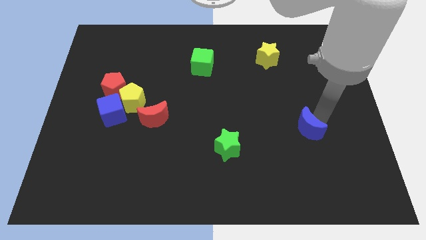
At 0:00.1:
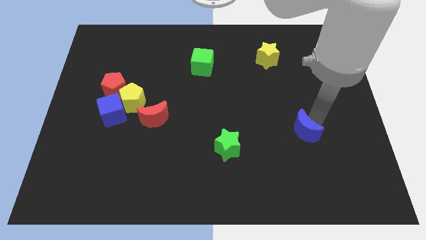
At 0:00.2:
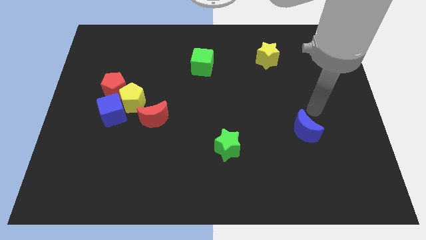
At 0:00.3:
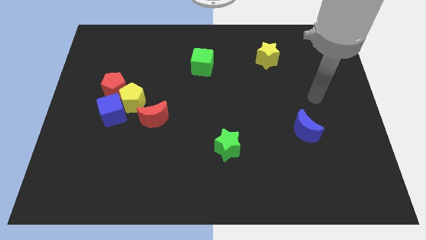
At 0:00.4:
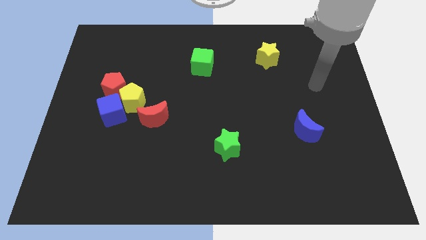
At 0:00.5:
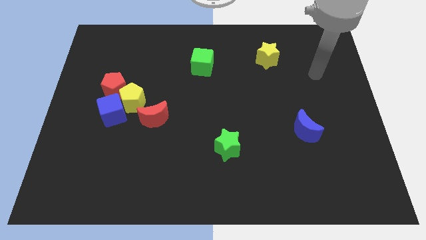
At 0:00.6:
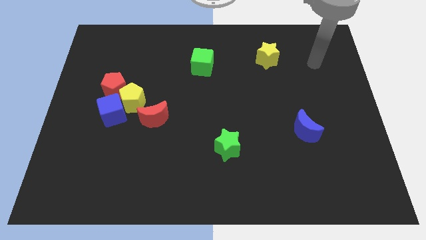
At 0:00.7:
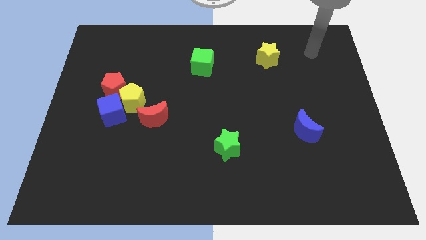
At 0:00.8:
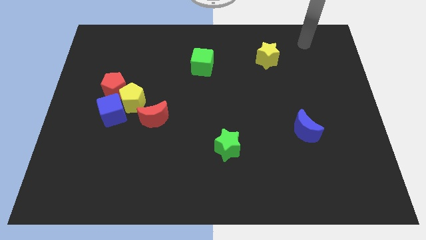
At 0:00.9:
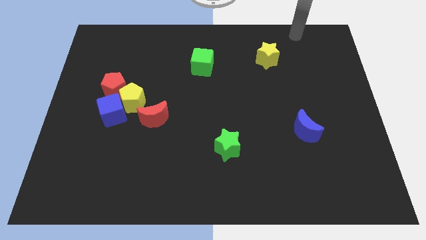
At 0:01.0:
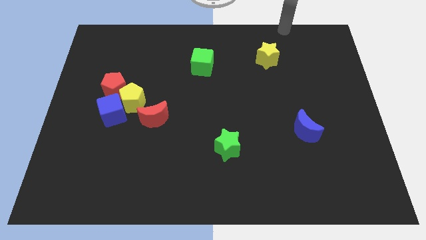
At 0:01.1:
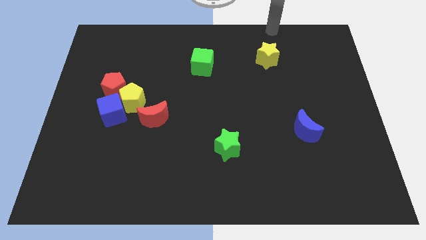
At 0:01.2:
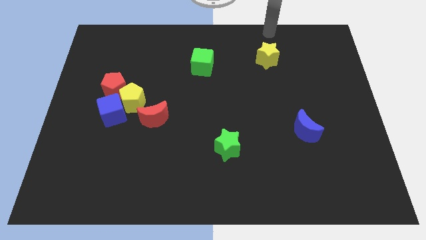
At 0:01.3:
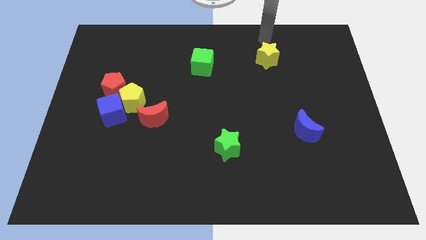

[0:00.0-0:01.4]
place the arm above the yellow star

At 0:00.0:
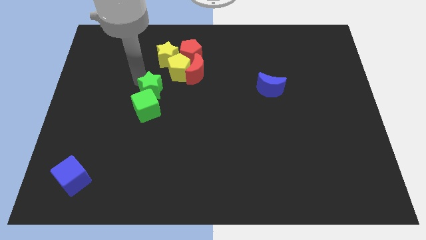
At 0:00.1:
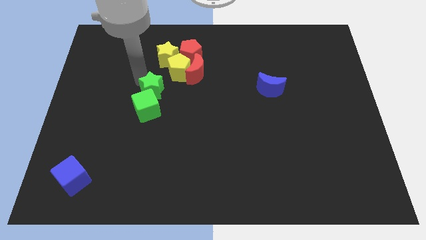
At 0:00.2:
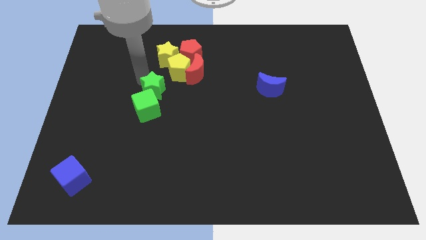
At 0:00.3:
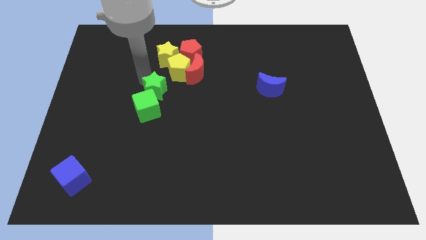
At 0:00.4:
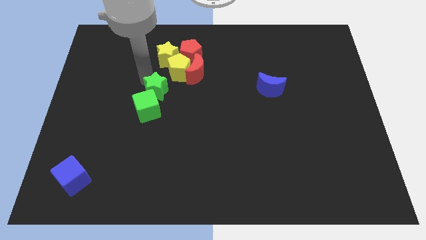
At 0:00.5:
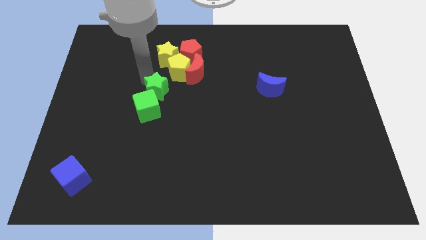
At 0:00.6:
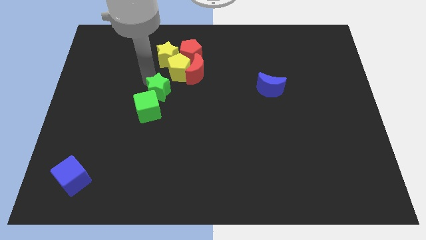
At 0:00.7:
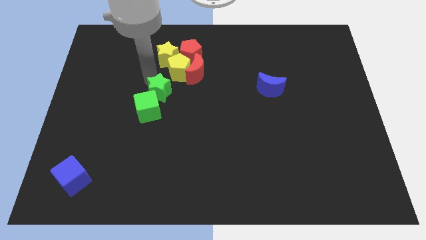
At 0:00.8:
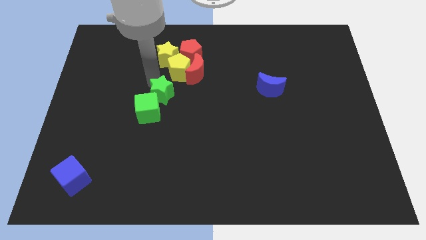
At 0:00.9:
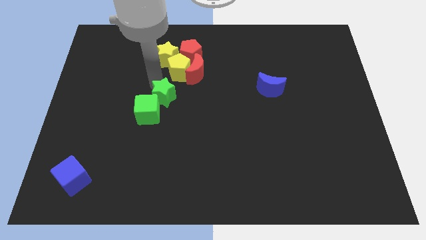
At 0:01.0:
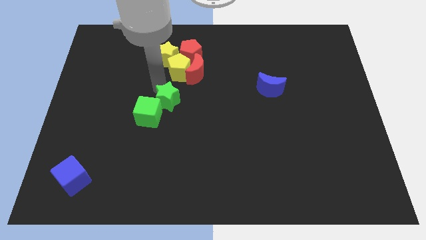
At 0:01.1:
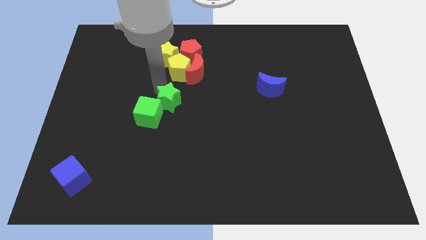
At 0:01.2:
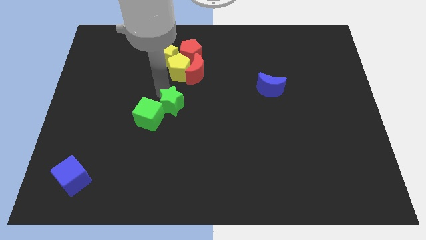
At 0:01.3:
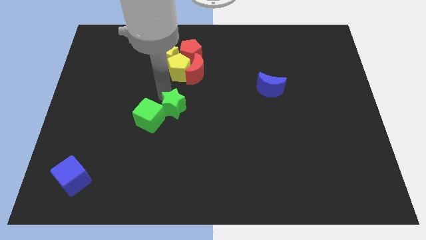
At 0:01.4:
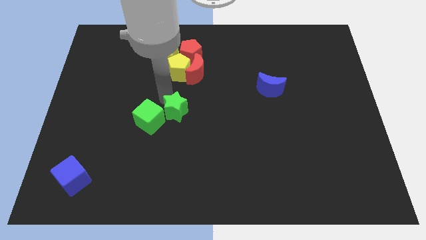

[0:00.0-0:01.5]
place the green star underneath the yellow pentagon

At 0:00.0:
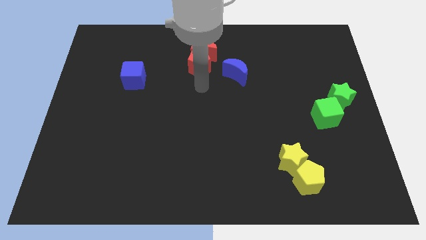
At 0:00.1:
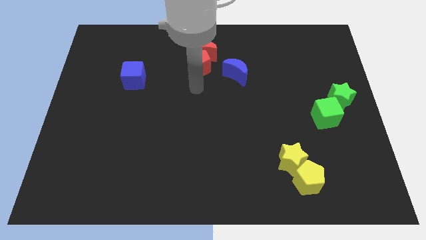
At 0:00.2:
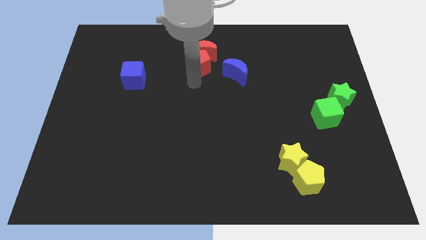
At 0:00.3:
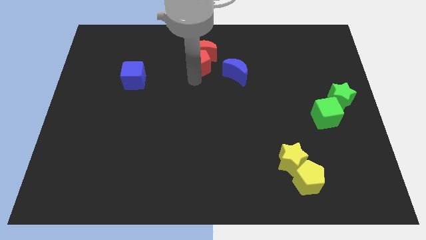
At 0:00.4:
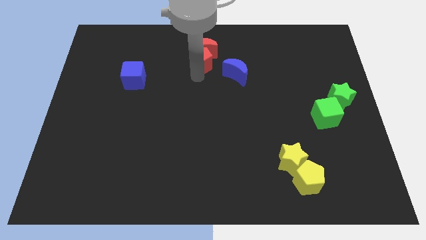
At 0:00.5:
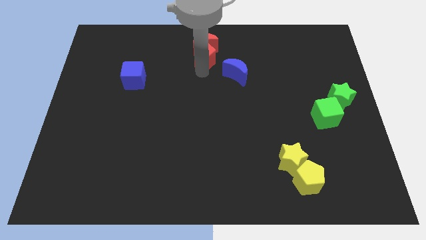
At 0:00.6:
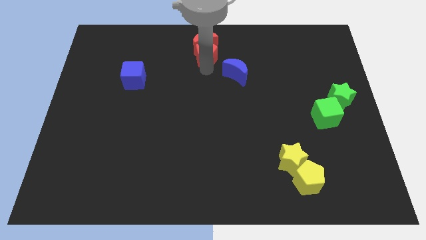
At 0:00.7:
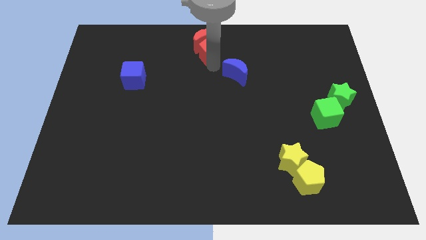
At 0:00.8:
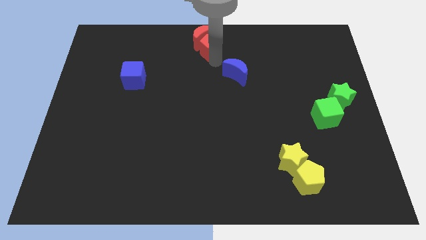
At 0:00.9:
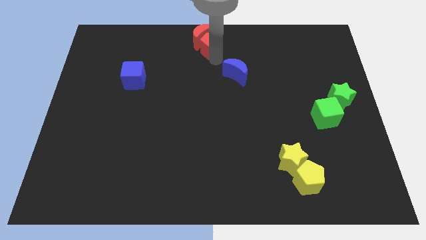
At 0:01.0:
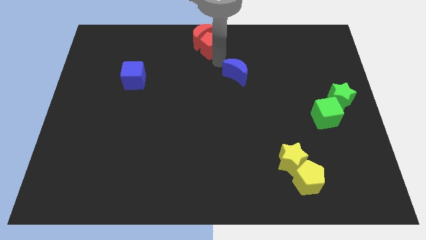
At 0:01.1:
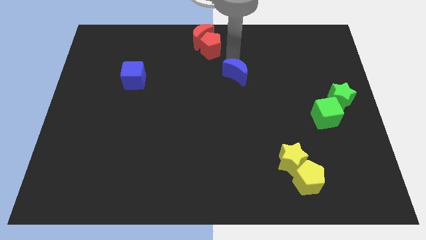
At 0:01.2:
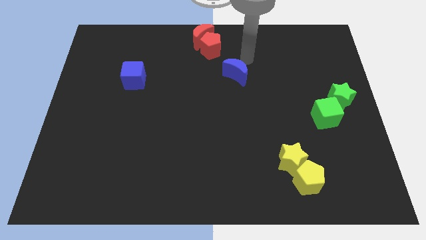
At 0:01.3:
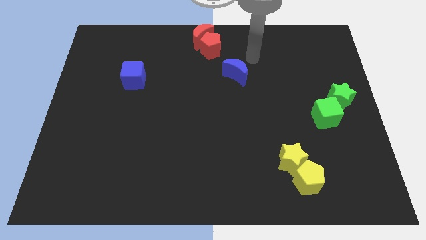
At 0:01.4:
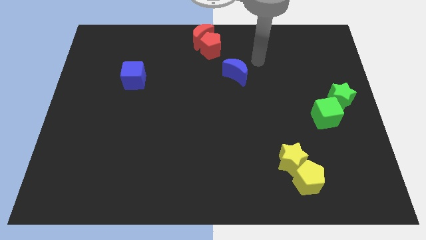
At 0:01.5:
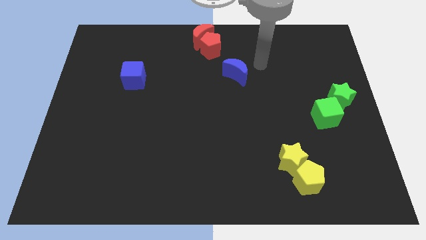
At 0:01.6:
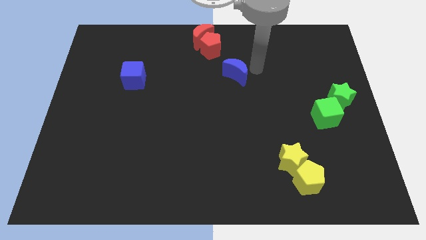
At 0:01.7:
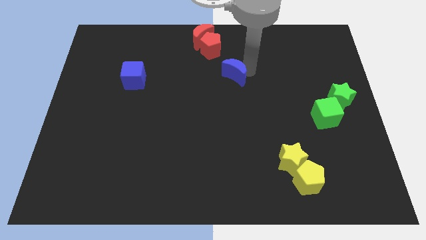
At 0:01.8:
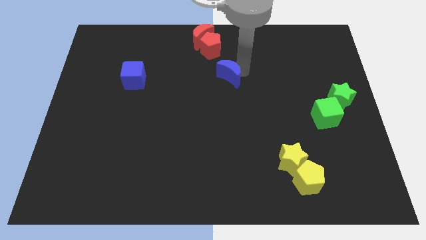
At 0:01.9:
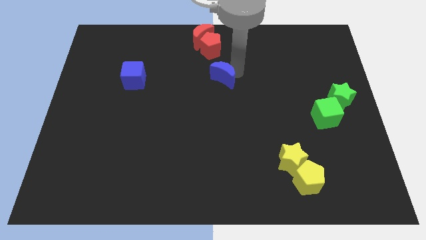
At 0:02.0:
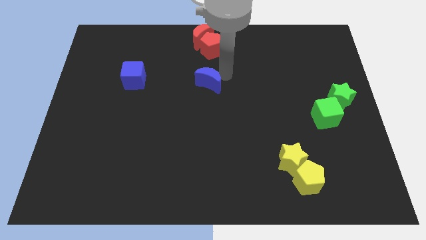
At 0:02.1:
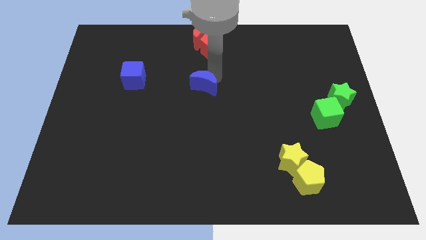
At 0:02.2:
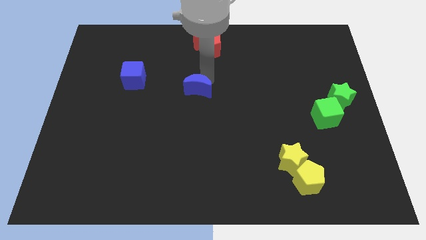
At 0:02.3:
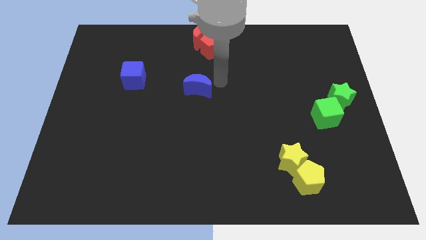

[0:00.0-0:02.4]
push blue crescent slightly towards left

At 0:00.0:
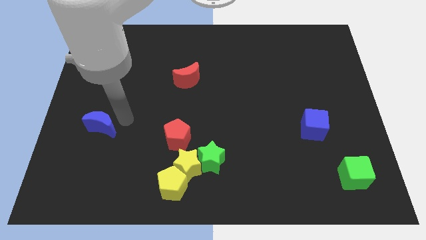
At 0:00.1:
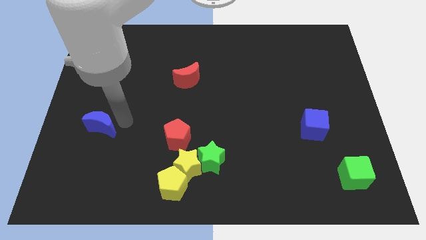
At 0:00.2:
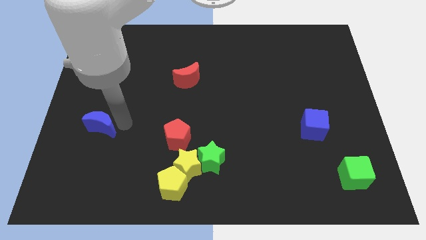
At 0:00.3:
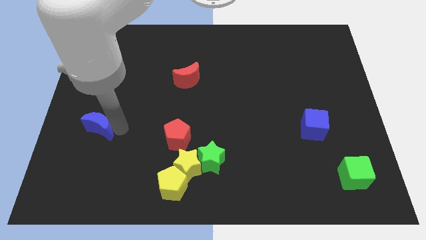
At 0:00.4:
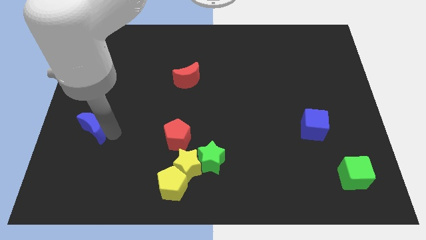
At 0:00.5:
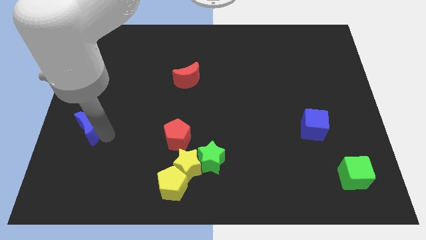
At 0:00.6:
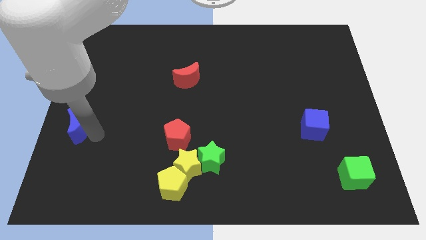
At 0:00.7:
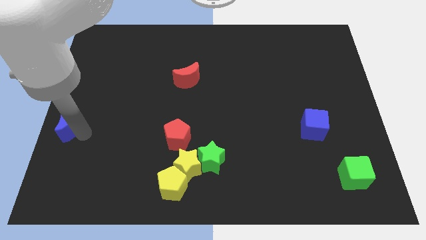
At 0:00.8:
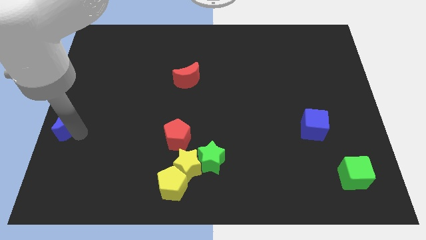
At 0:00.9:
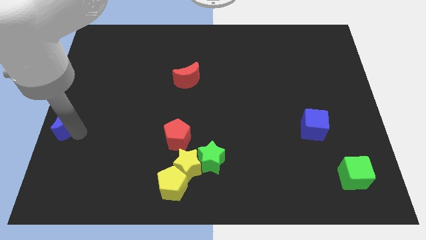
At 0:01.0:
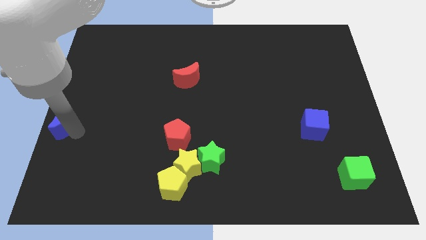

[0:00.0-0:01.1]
move the blue crescent to the left center of the board

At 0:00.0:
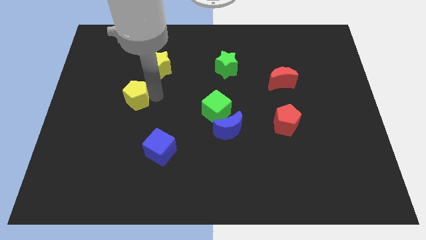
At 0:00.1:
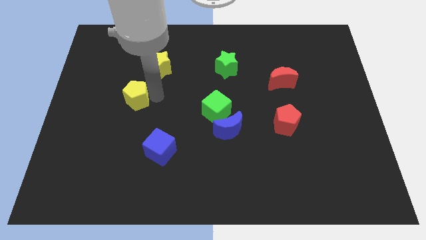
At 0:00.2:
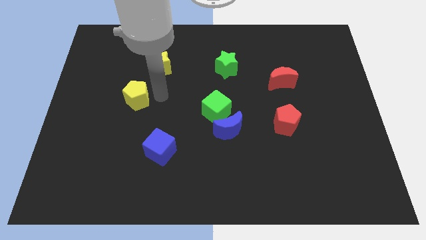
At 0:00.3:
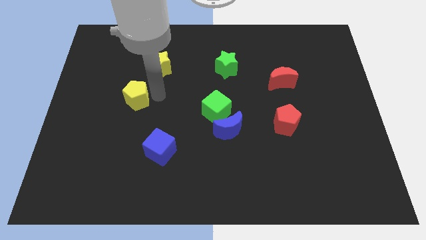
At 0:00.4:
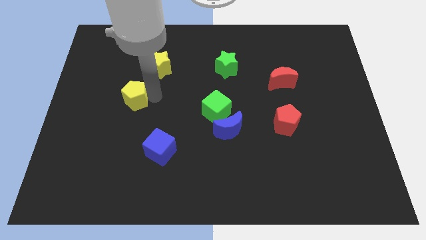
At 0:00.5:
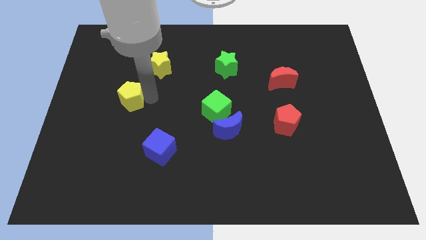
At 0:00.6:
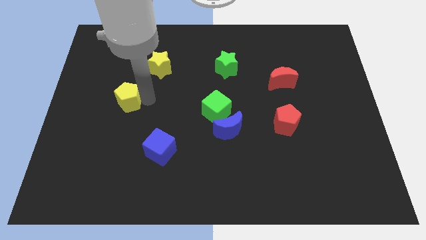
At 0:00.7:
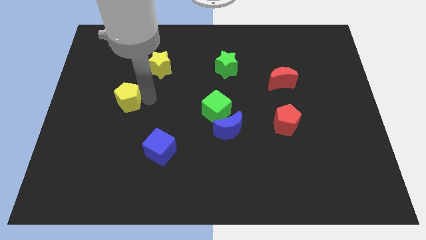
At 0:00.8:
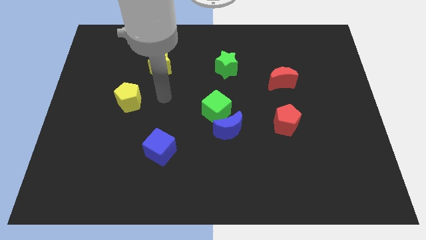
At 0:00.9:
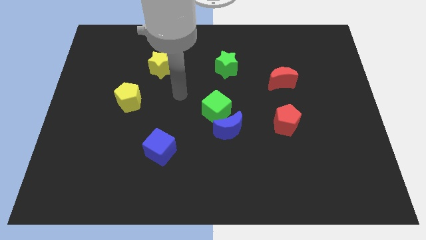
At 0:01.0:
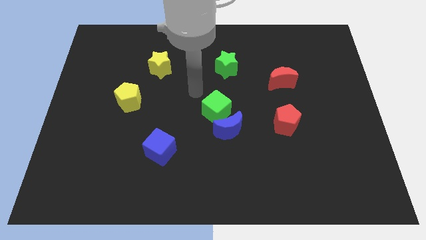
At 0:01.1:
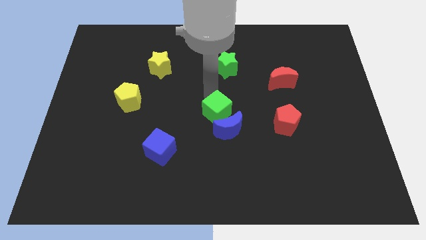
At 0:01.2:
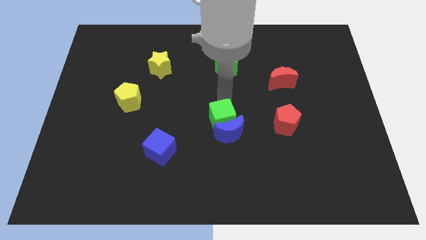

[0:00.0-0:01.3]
move arm above the green cube

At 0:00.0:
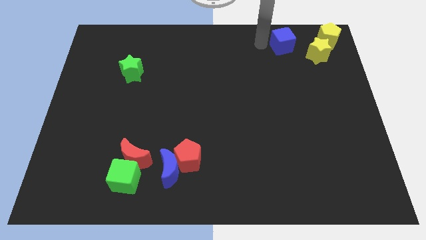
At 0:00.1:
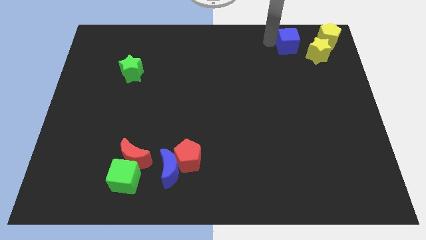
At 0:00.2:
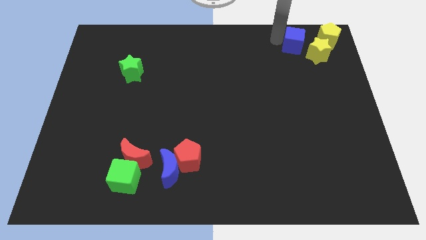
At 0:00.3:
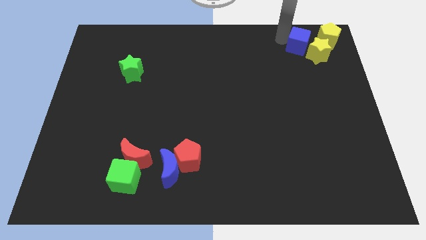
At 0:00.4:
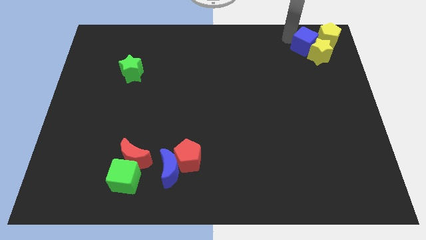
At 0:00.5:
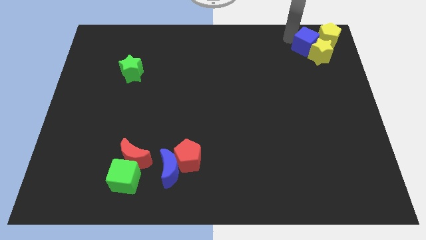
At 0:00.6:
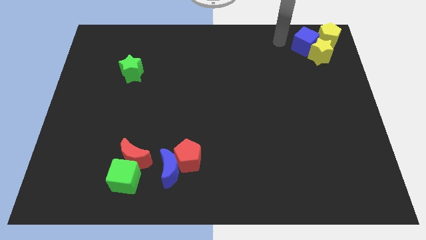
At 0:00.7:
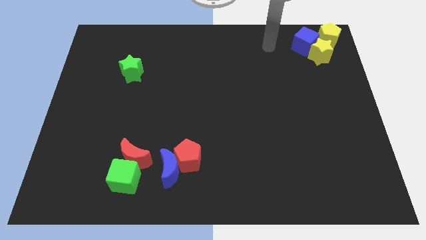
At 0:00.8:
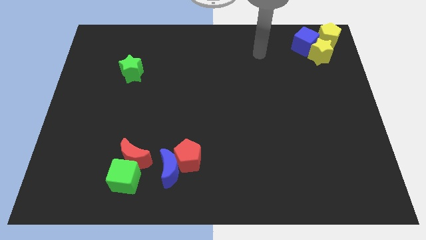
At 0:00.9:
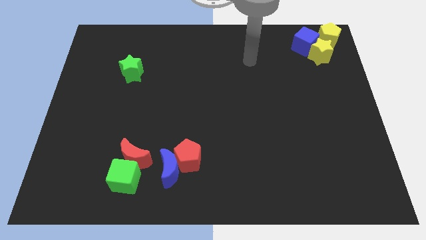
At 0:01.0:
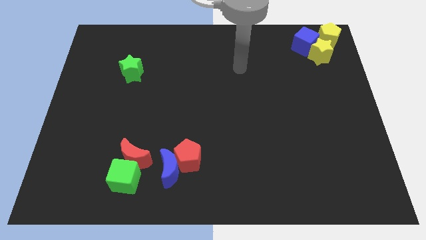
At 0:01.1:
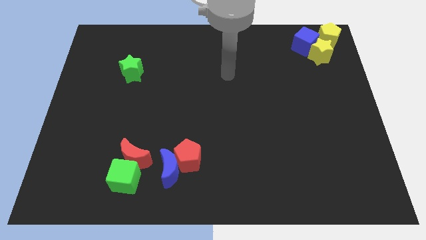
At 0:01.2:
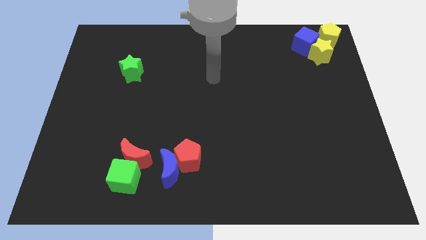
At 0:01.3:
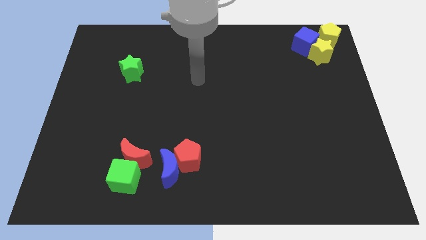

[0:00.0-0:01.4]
push the blue cube into the yellow blocks
